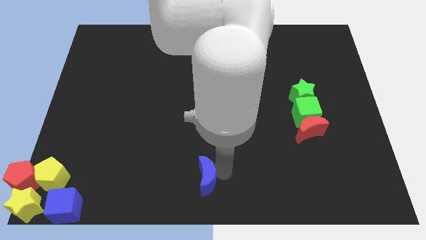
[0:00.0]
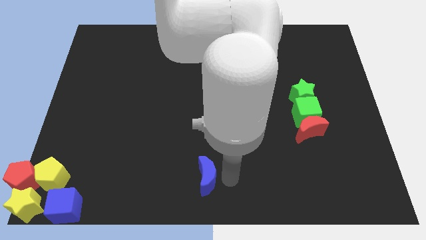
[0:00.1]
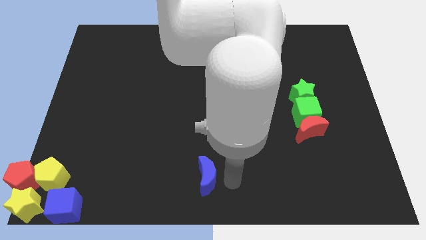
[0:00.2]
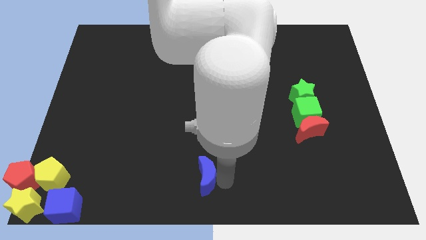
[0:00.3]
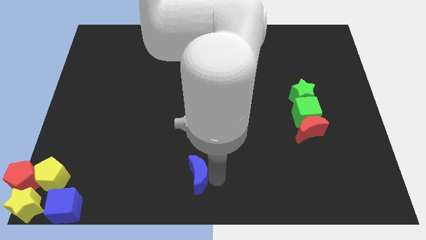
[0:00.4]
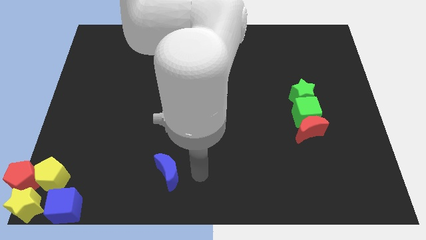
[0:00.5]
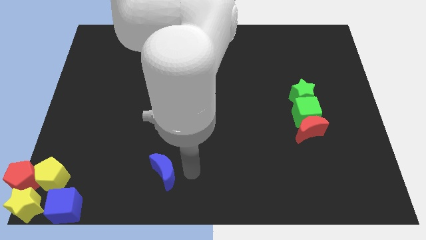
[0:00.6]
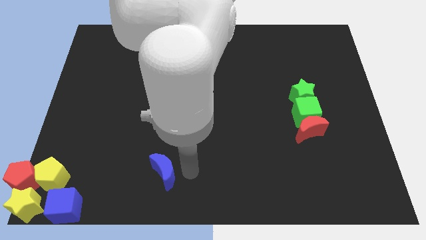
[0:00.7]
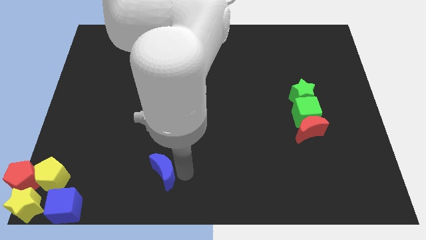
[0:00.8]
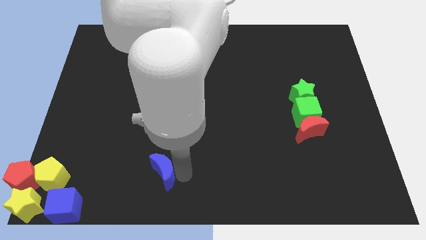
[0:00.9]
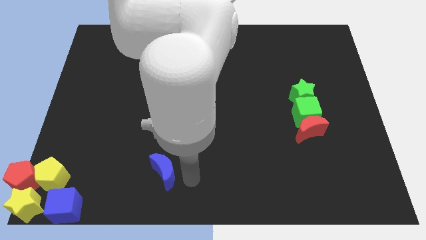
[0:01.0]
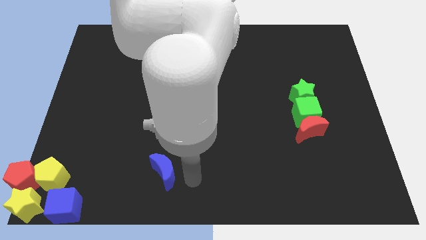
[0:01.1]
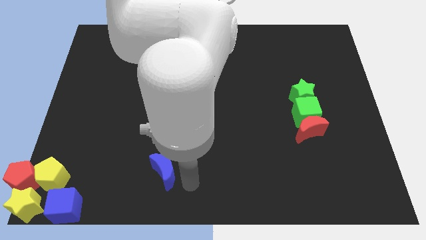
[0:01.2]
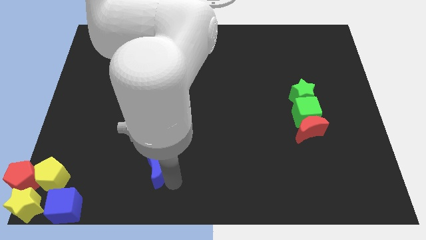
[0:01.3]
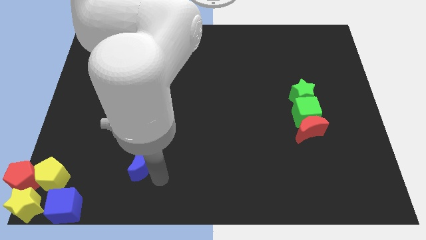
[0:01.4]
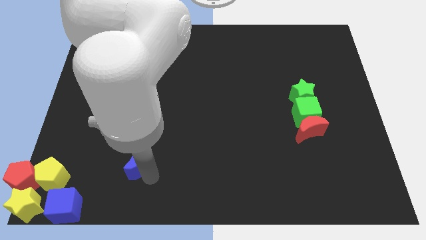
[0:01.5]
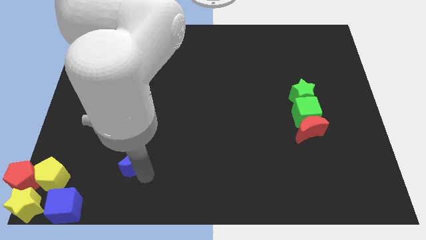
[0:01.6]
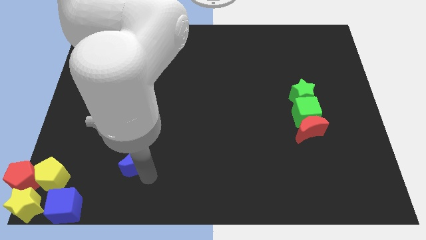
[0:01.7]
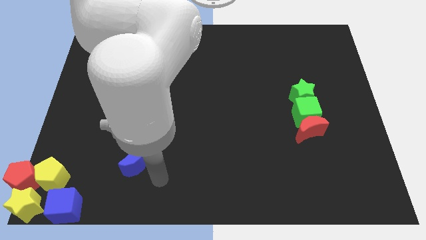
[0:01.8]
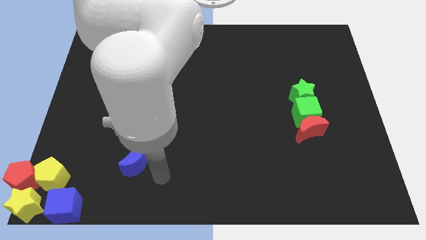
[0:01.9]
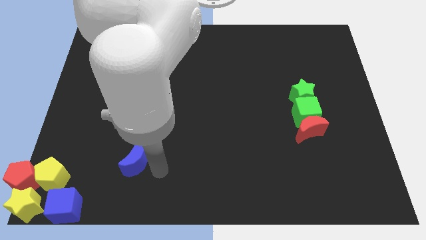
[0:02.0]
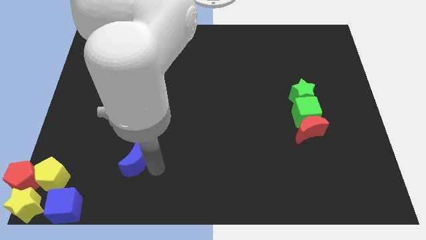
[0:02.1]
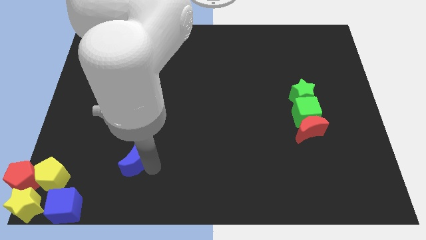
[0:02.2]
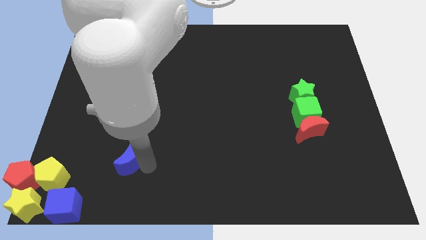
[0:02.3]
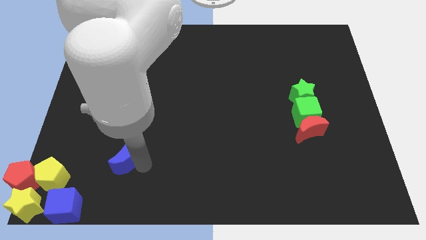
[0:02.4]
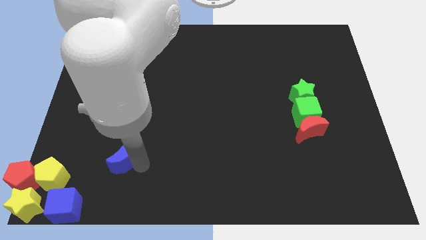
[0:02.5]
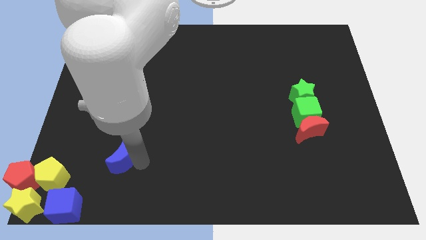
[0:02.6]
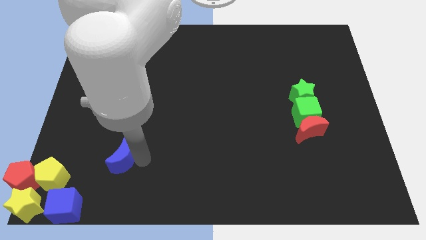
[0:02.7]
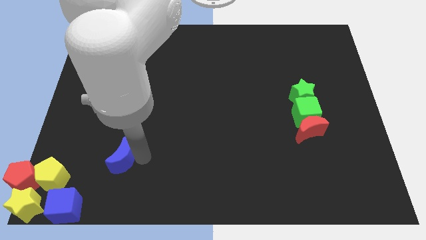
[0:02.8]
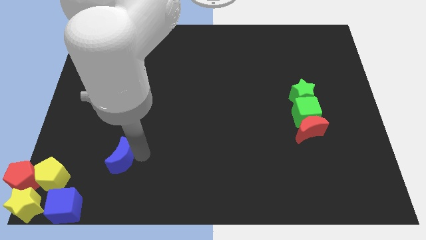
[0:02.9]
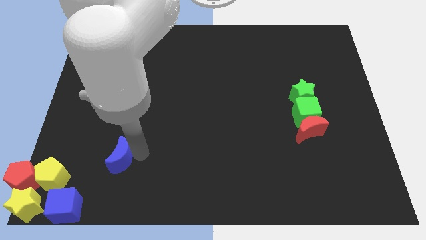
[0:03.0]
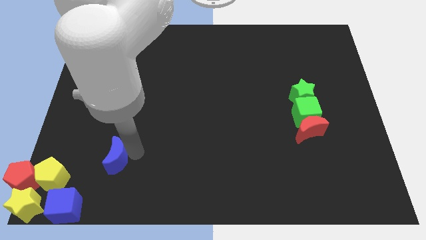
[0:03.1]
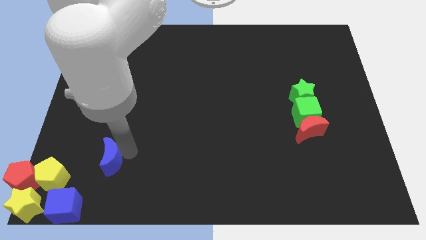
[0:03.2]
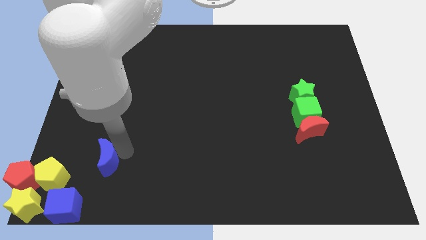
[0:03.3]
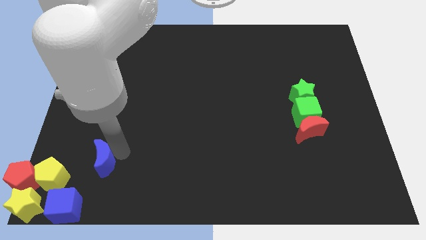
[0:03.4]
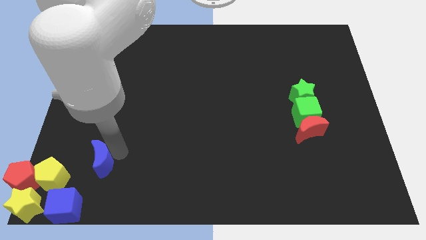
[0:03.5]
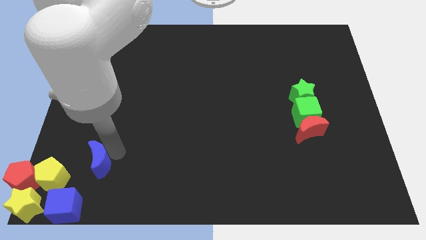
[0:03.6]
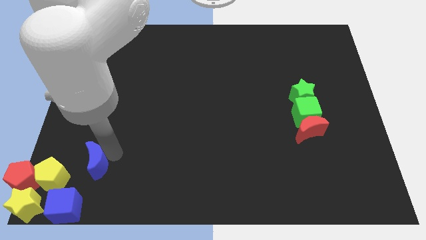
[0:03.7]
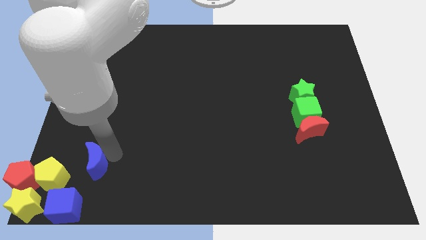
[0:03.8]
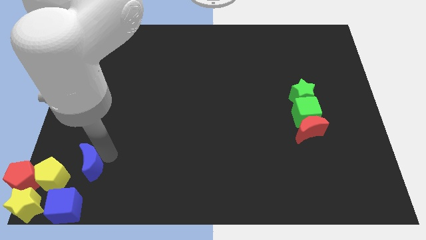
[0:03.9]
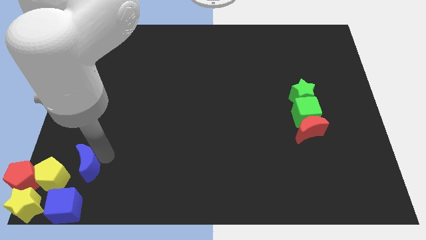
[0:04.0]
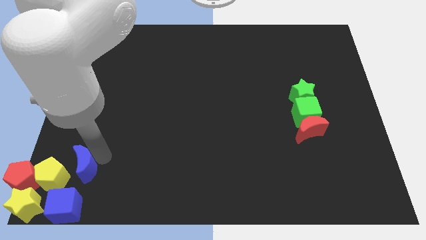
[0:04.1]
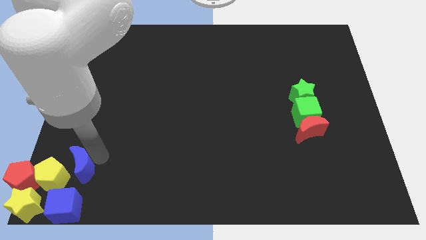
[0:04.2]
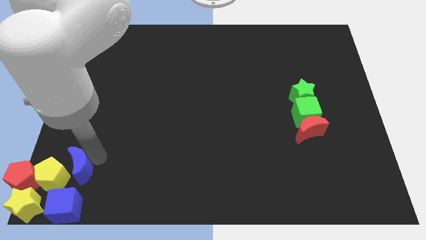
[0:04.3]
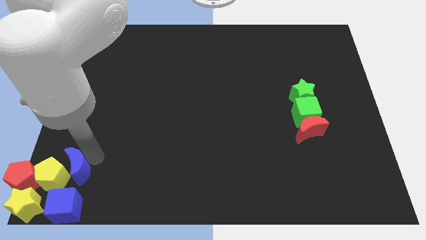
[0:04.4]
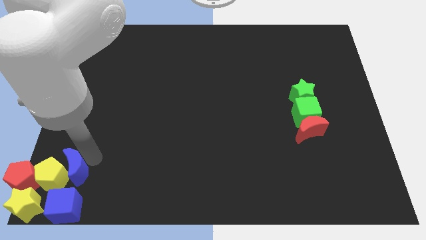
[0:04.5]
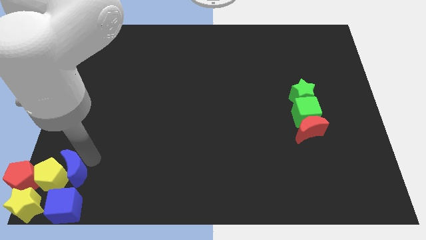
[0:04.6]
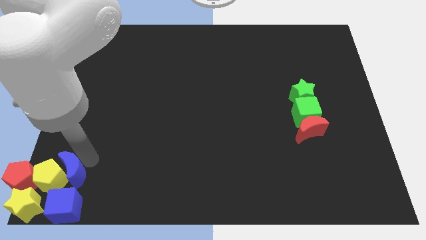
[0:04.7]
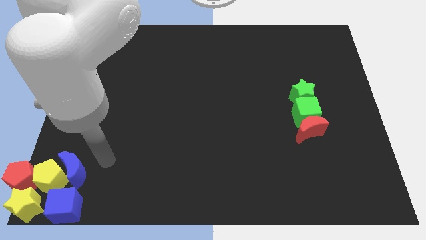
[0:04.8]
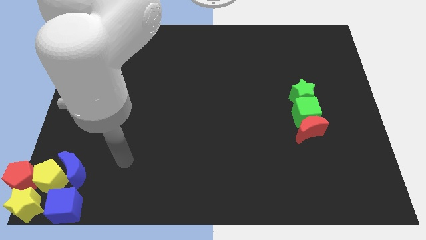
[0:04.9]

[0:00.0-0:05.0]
push the blue crescent to the right of the yellow pentagon

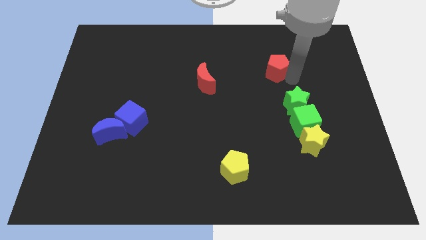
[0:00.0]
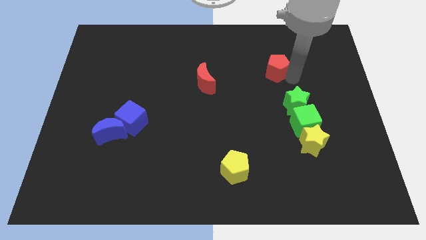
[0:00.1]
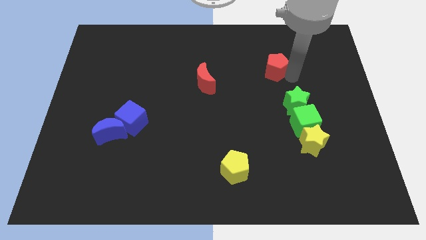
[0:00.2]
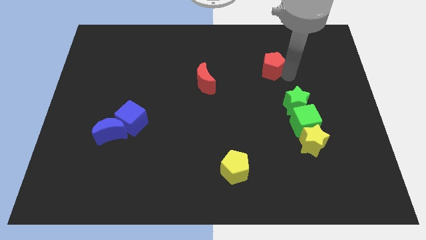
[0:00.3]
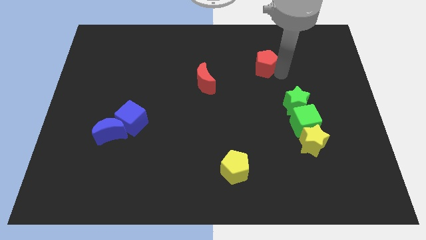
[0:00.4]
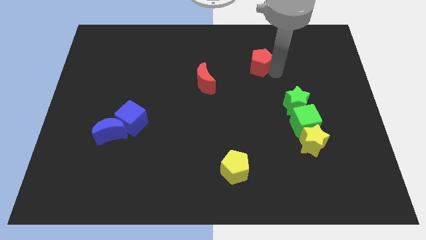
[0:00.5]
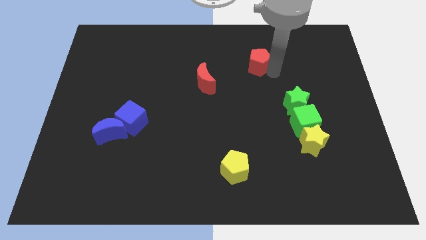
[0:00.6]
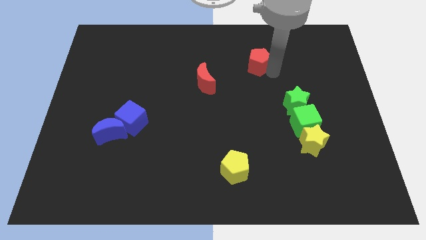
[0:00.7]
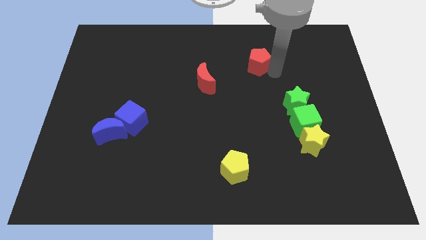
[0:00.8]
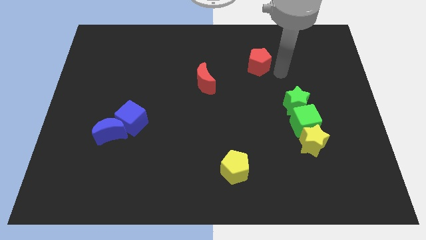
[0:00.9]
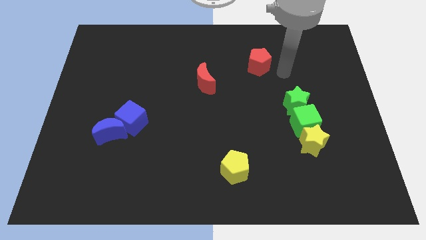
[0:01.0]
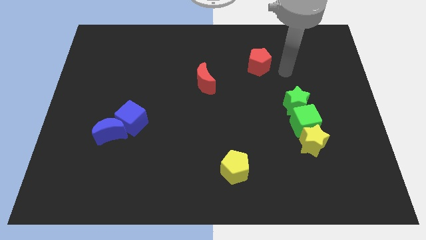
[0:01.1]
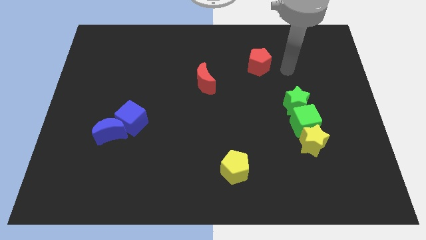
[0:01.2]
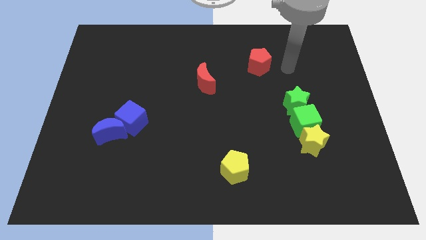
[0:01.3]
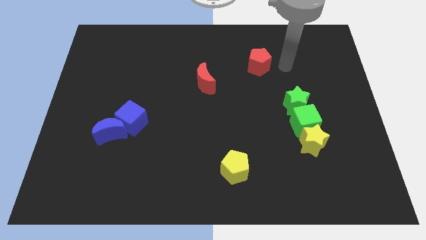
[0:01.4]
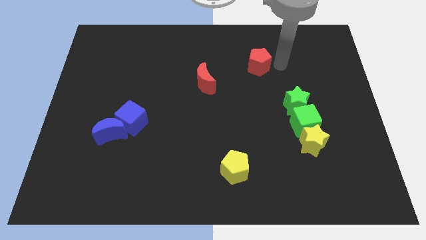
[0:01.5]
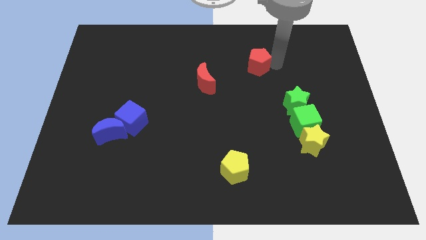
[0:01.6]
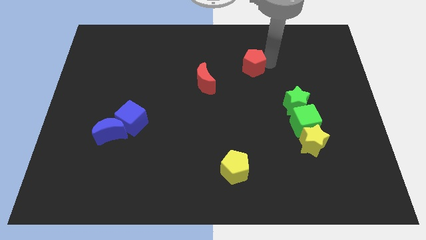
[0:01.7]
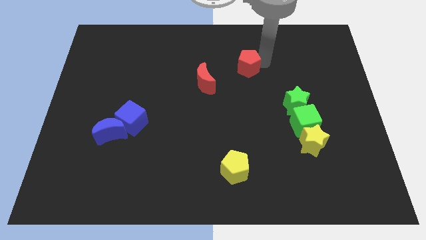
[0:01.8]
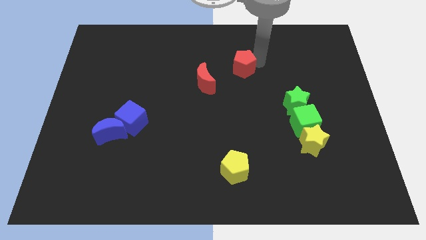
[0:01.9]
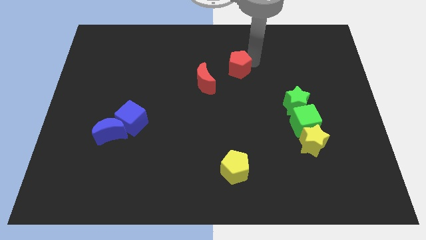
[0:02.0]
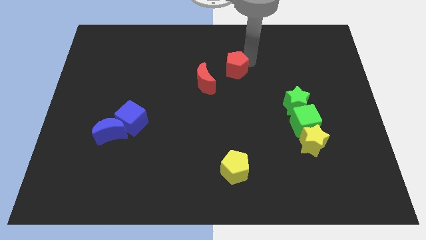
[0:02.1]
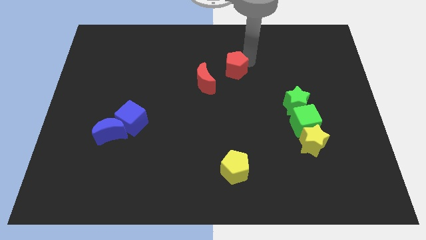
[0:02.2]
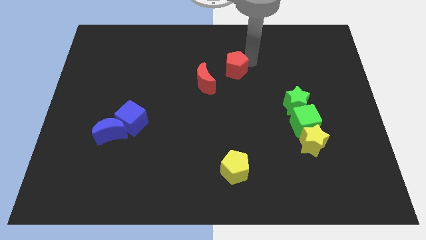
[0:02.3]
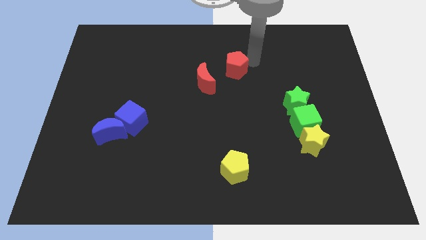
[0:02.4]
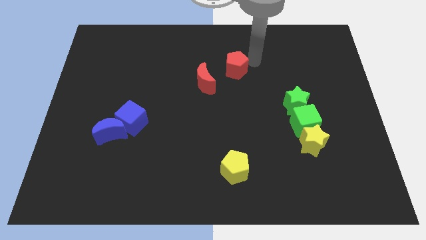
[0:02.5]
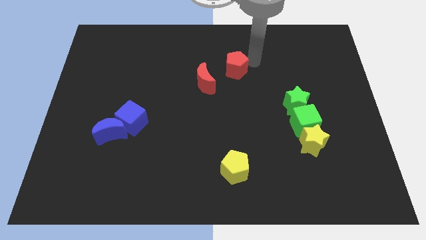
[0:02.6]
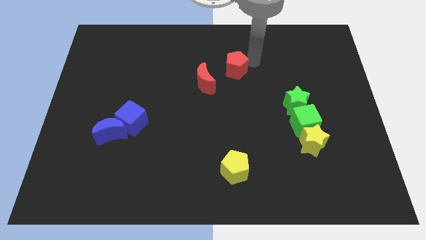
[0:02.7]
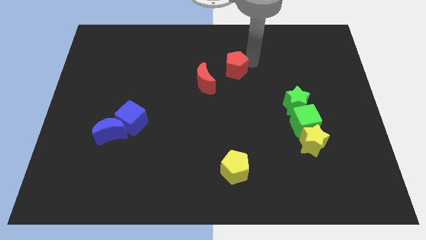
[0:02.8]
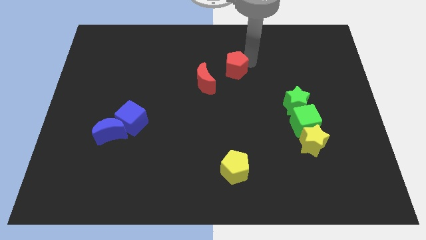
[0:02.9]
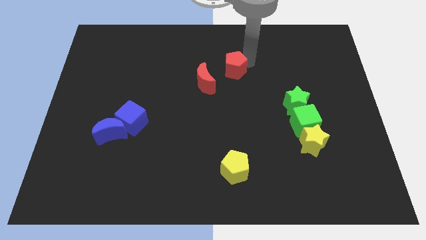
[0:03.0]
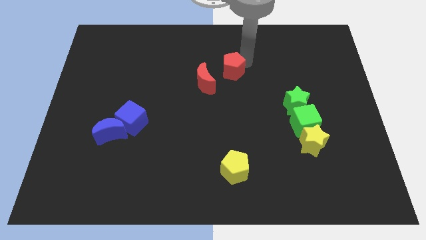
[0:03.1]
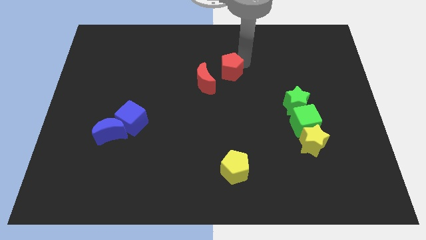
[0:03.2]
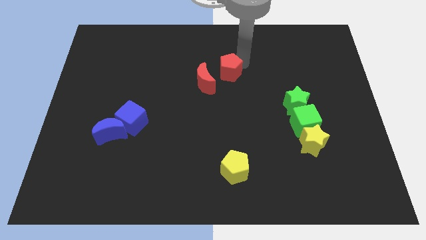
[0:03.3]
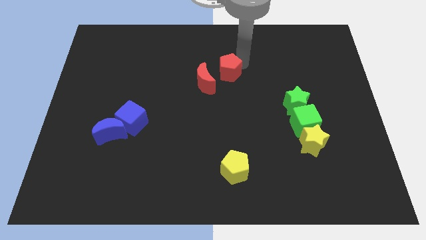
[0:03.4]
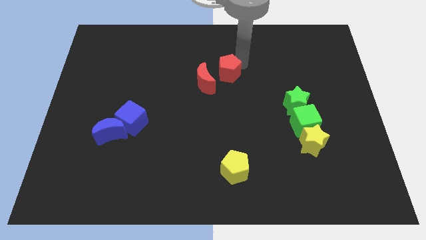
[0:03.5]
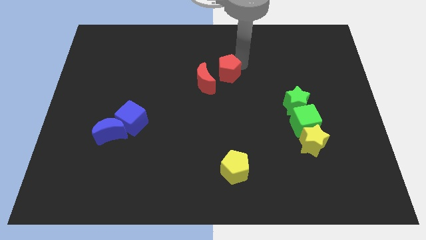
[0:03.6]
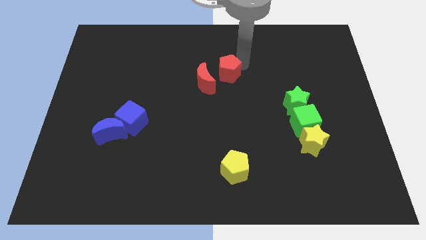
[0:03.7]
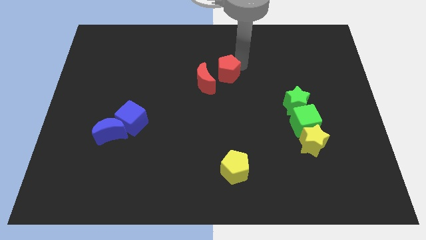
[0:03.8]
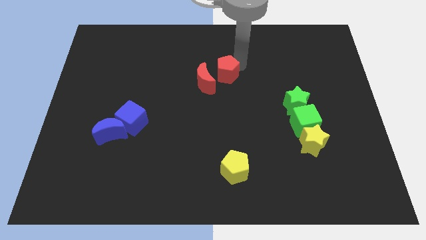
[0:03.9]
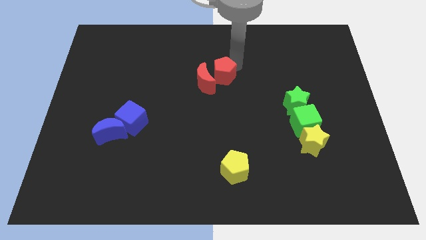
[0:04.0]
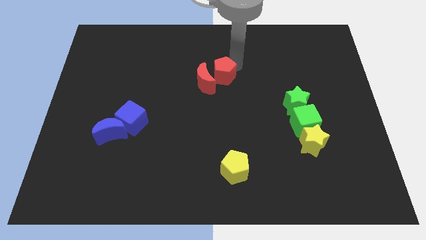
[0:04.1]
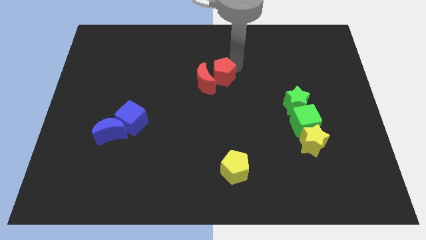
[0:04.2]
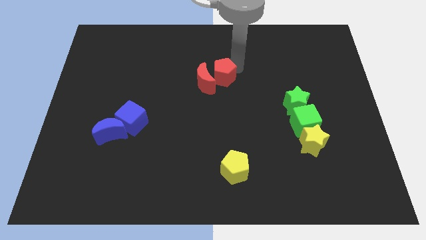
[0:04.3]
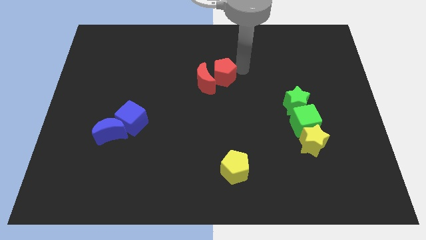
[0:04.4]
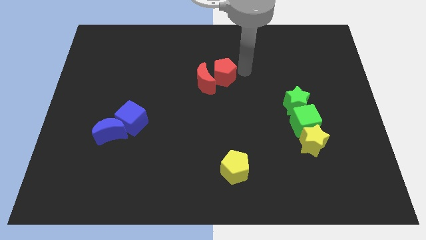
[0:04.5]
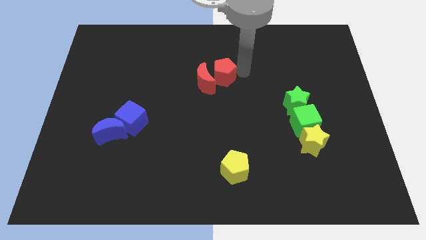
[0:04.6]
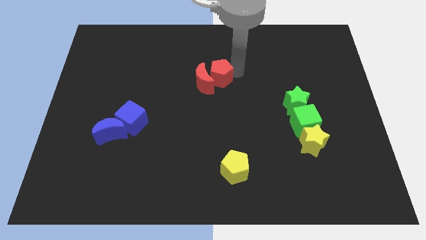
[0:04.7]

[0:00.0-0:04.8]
move the red pentagon into the red crescent
